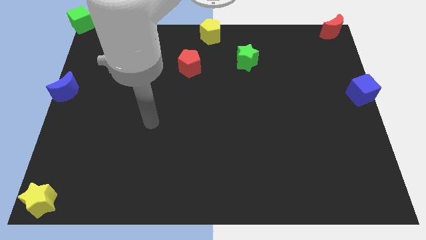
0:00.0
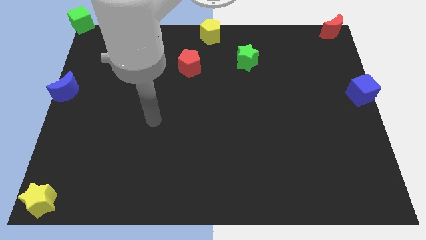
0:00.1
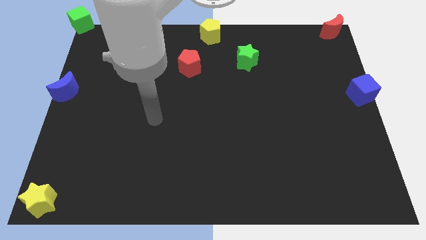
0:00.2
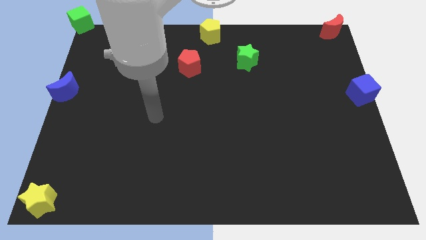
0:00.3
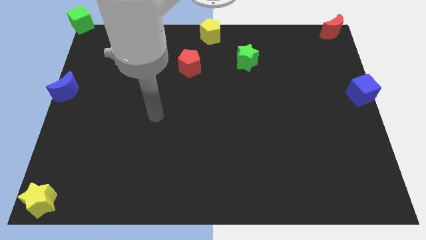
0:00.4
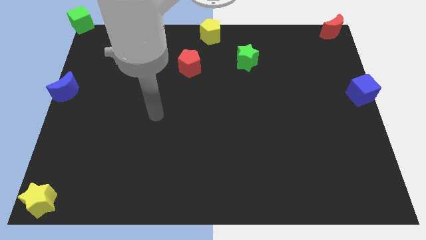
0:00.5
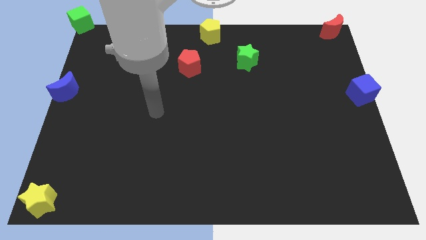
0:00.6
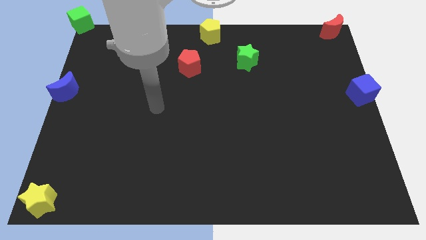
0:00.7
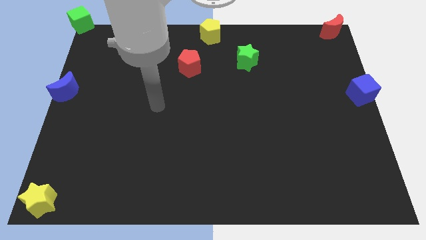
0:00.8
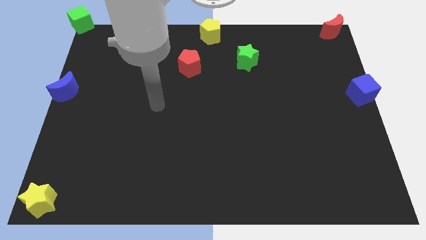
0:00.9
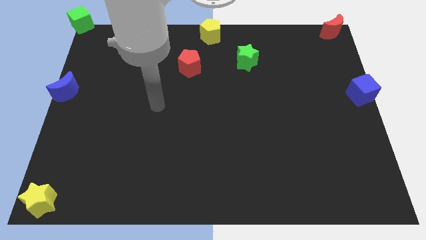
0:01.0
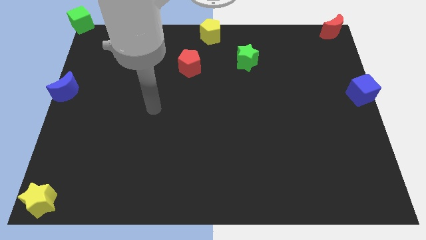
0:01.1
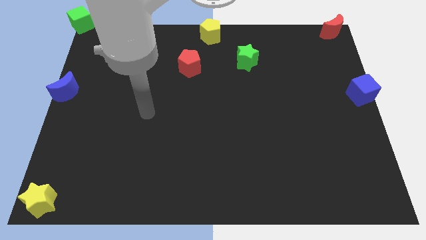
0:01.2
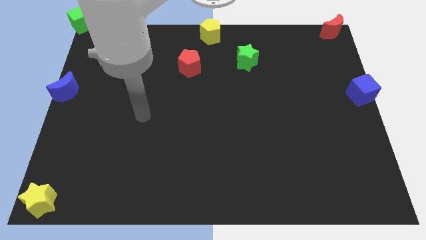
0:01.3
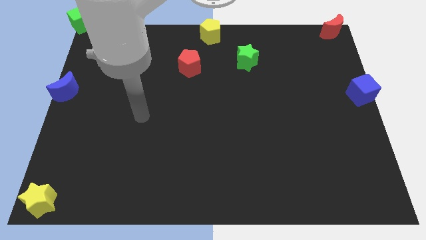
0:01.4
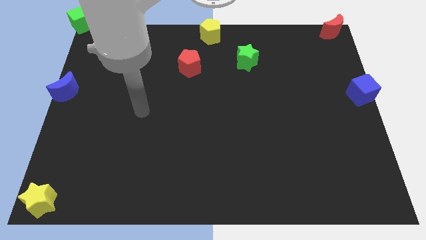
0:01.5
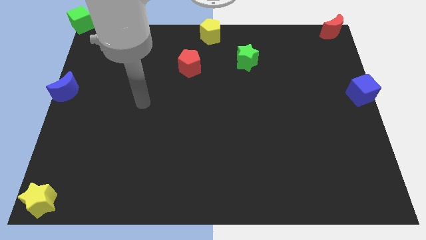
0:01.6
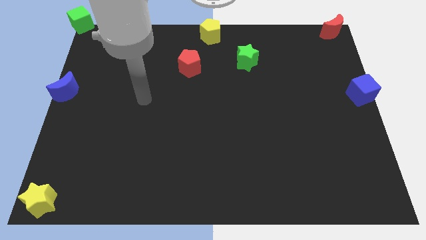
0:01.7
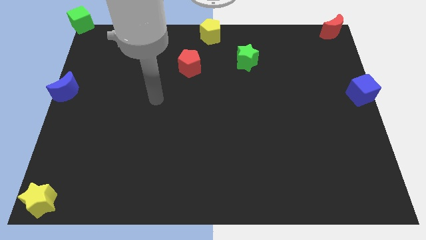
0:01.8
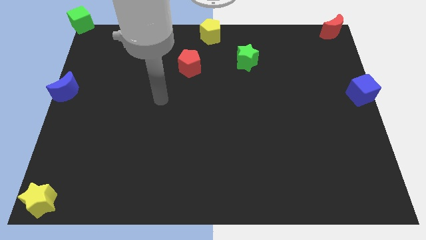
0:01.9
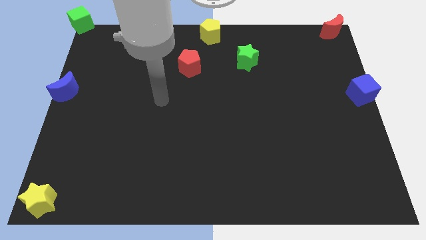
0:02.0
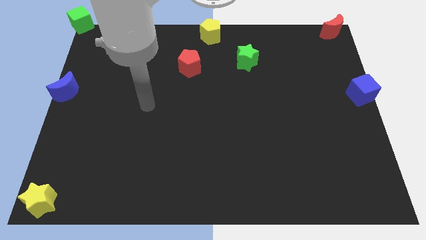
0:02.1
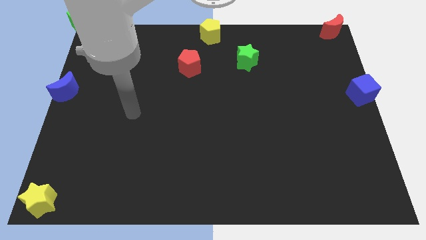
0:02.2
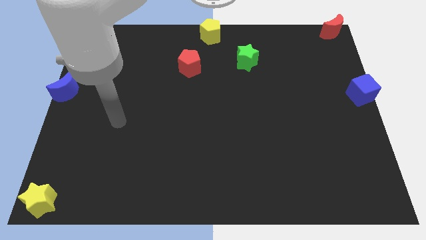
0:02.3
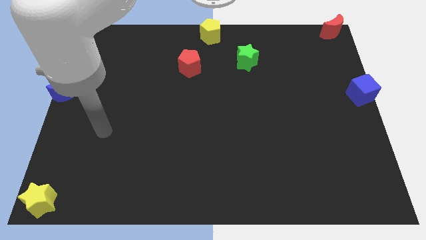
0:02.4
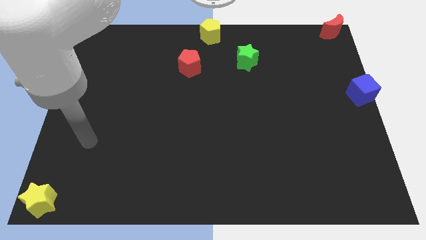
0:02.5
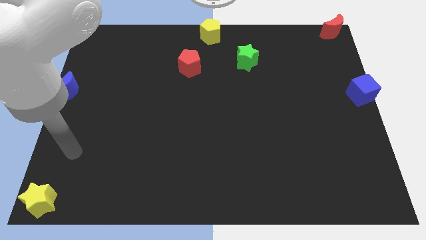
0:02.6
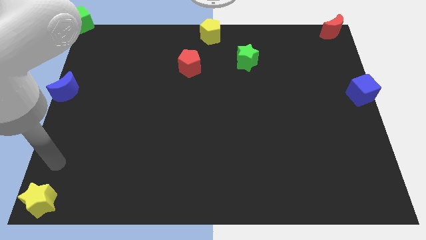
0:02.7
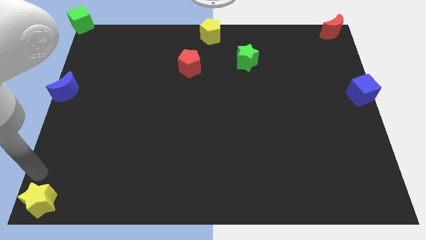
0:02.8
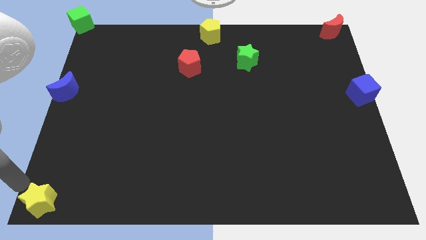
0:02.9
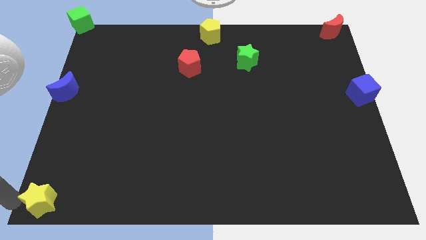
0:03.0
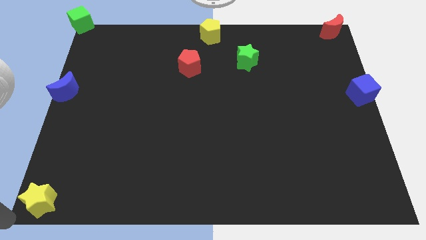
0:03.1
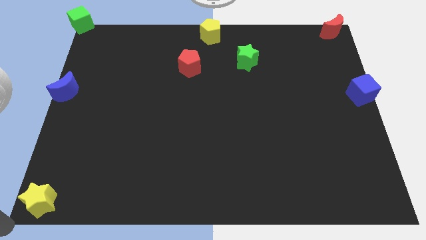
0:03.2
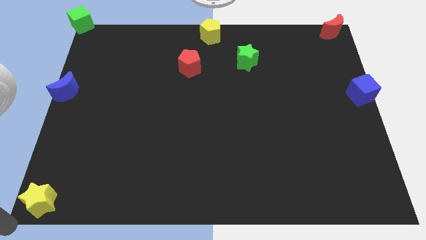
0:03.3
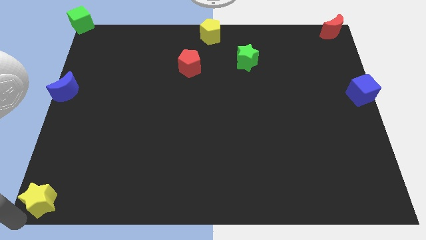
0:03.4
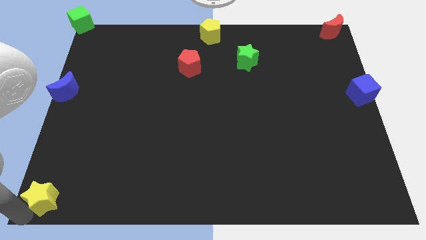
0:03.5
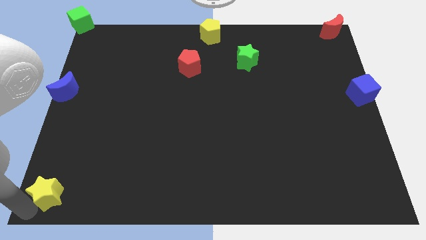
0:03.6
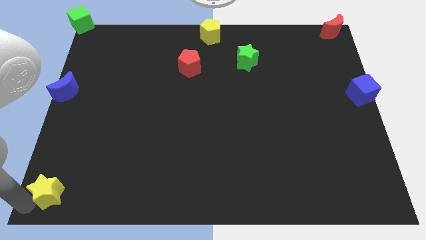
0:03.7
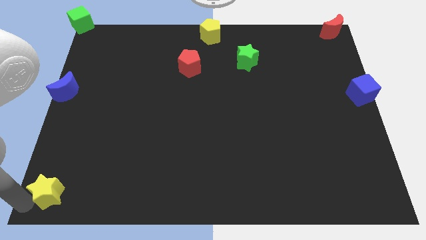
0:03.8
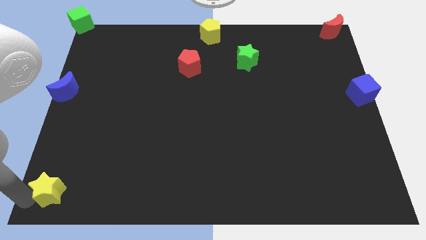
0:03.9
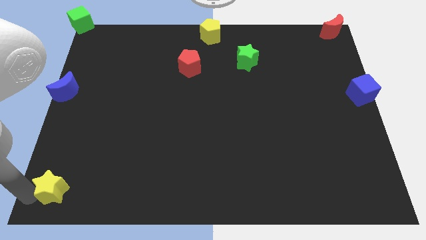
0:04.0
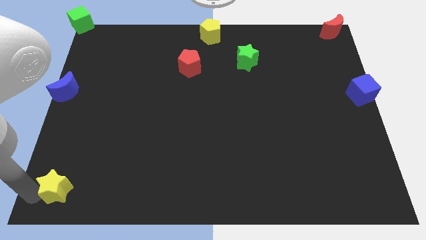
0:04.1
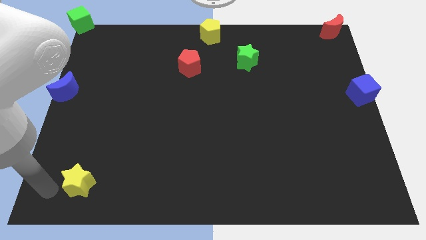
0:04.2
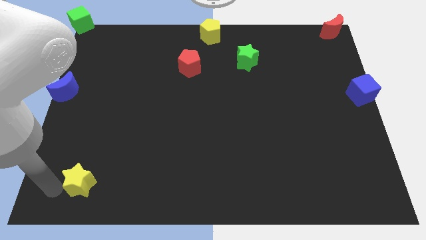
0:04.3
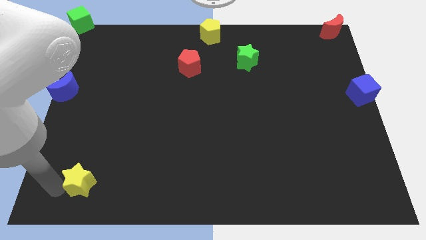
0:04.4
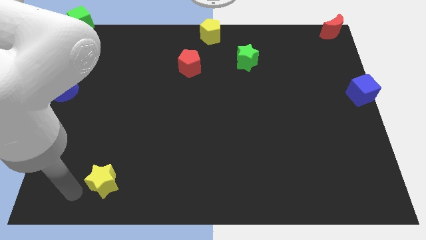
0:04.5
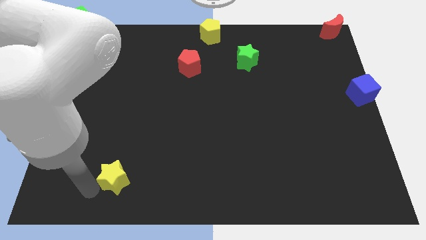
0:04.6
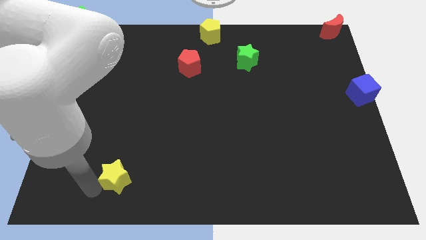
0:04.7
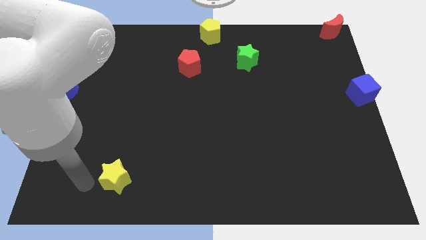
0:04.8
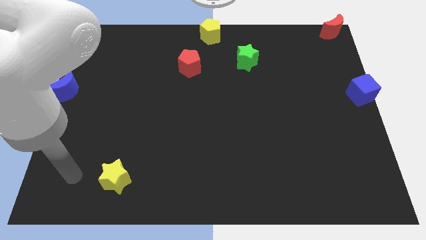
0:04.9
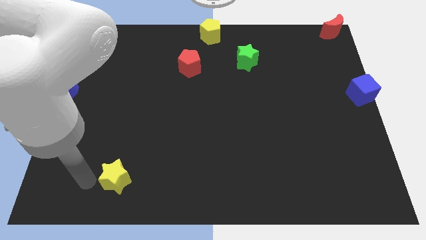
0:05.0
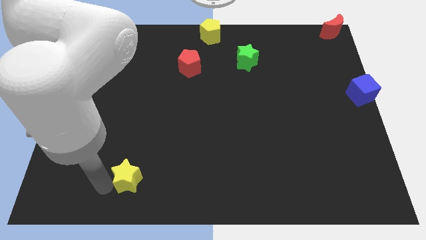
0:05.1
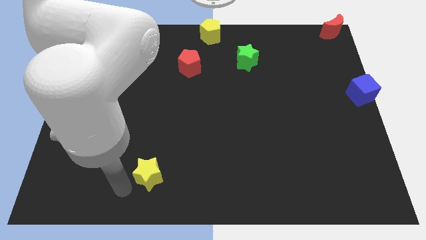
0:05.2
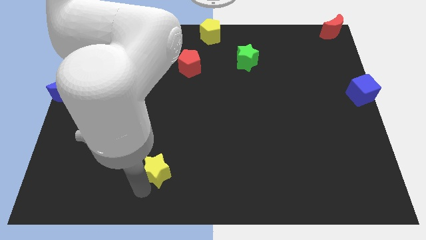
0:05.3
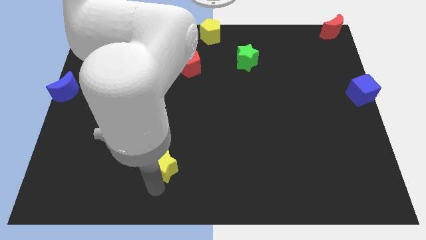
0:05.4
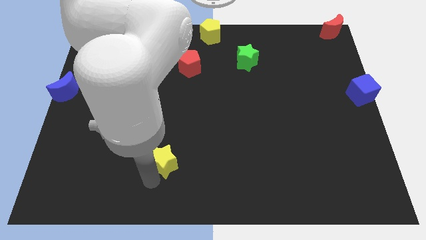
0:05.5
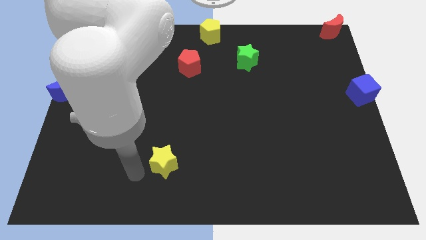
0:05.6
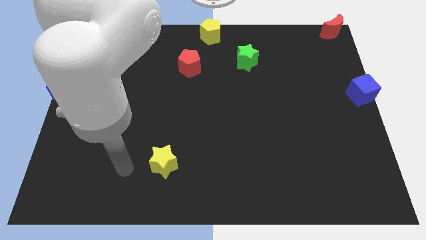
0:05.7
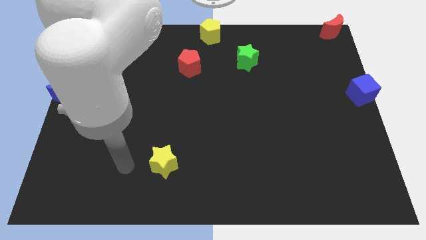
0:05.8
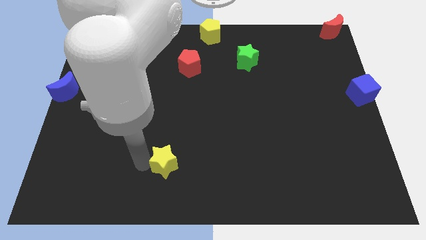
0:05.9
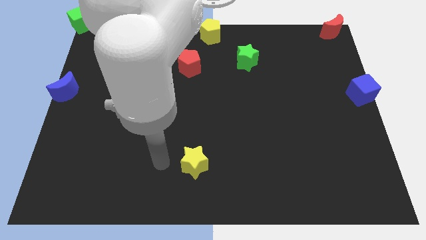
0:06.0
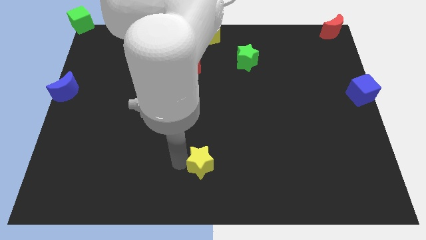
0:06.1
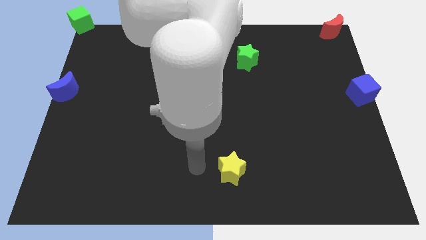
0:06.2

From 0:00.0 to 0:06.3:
move the yellow block to the centre of the board

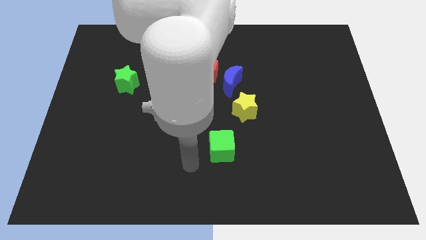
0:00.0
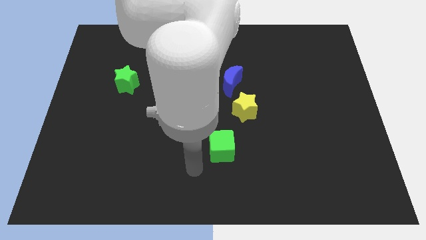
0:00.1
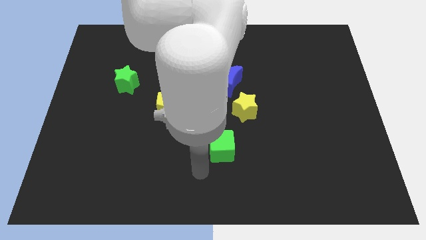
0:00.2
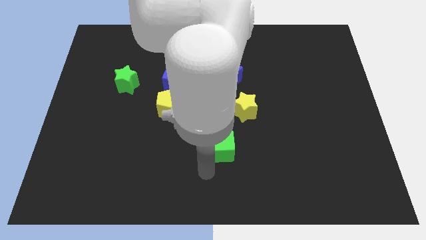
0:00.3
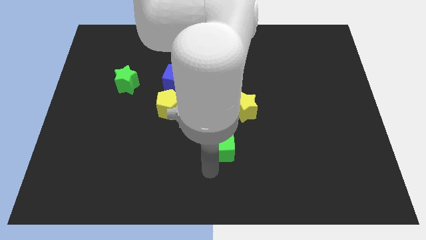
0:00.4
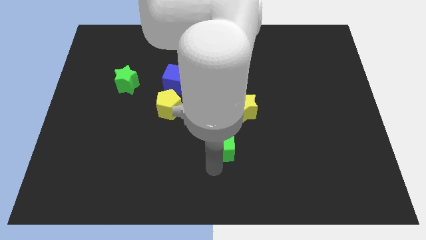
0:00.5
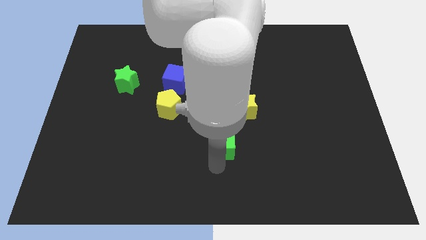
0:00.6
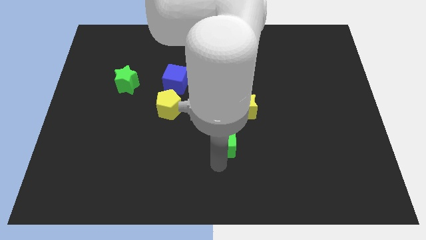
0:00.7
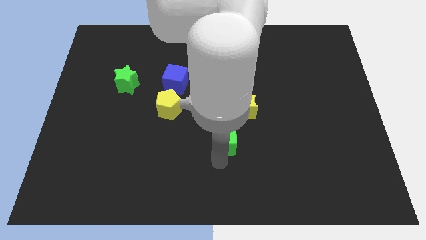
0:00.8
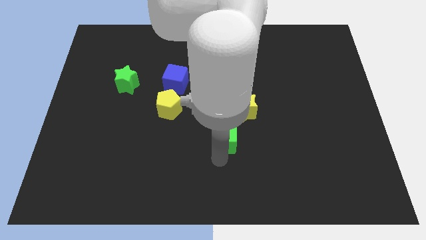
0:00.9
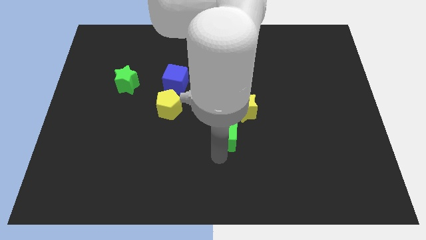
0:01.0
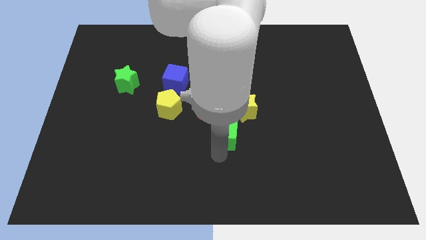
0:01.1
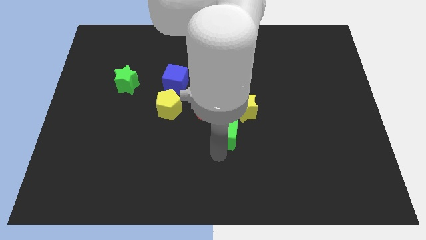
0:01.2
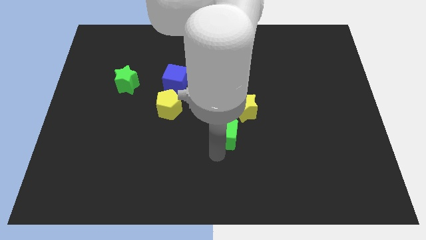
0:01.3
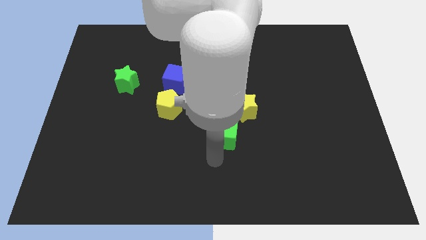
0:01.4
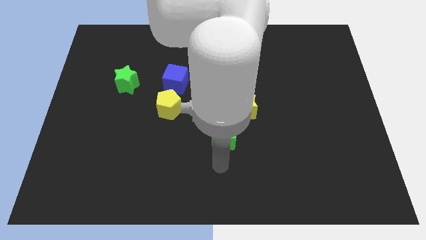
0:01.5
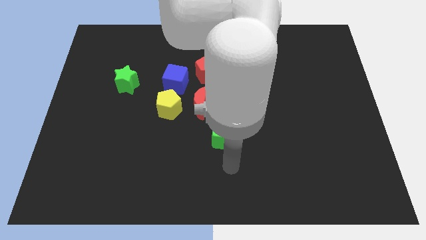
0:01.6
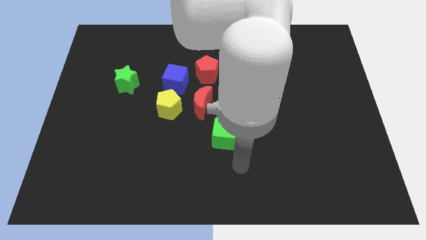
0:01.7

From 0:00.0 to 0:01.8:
place green cube to the bottom left of the yellow star

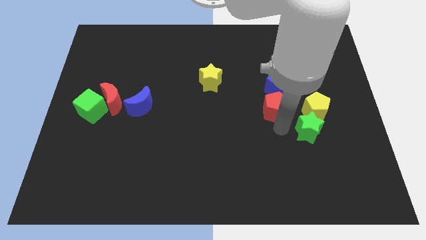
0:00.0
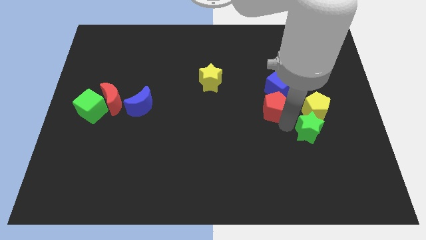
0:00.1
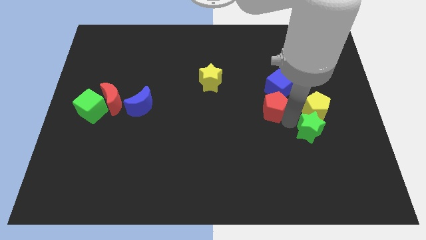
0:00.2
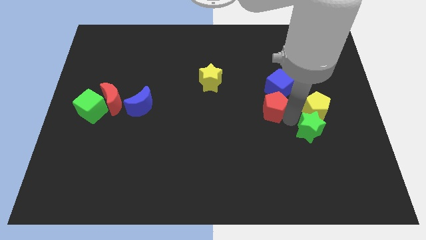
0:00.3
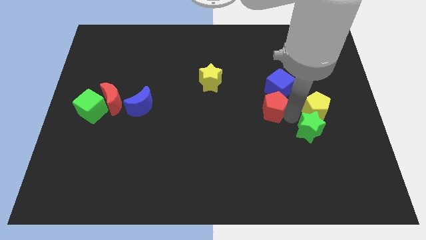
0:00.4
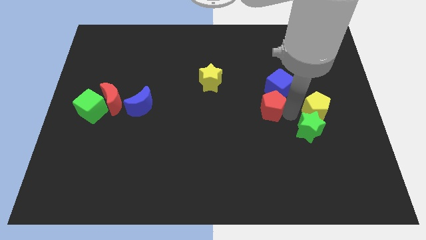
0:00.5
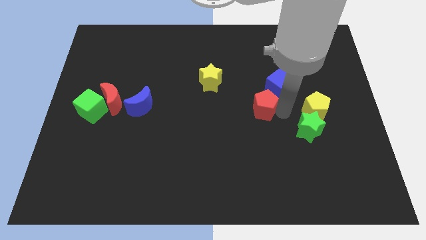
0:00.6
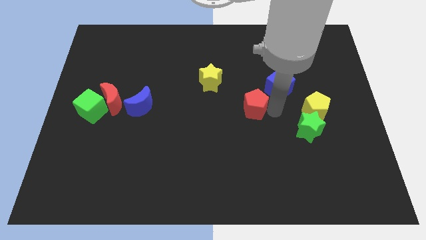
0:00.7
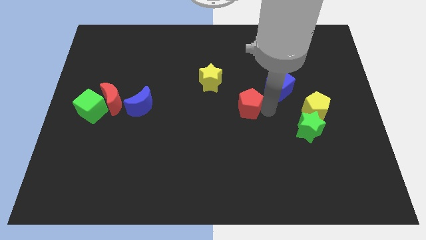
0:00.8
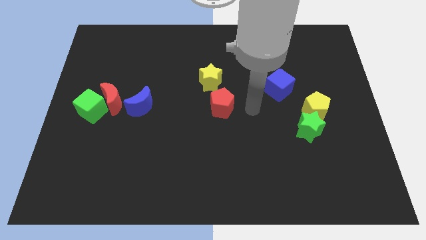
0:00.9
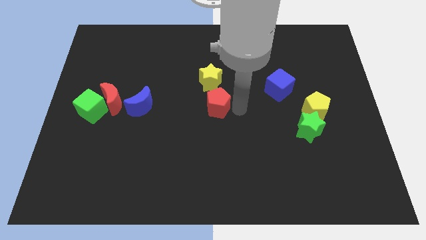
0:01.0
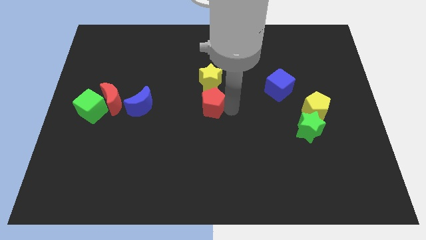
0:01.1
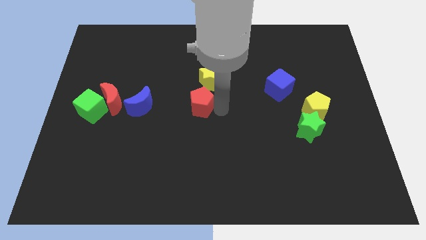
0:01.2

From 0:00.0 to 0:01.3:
push the red pentagon to the bottom of the yellow star
